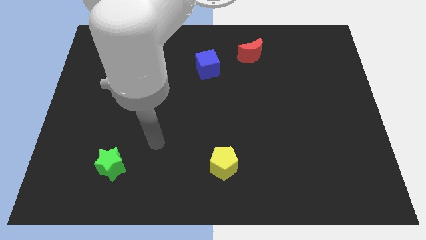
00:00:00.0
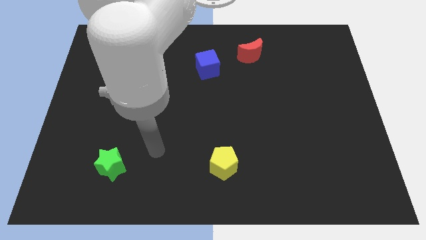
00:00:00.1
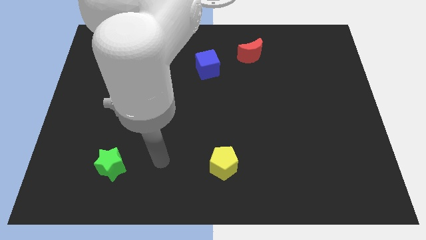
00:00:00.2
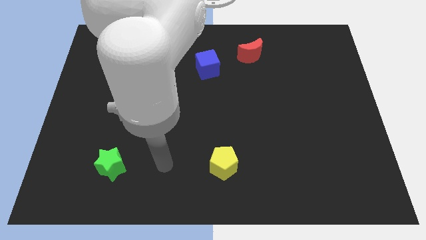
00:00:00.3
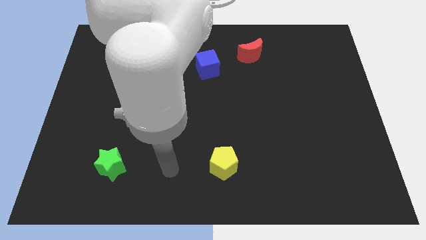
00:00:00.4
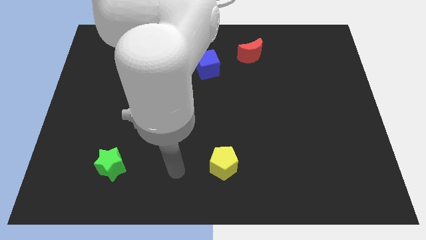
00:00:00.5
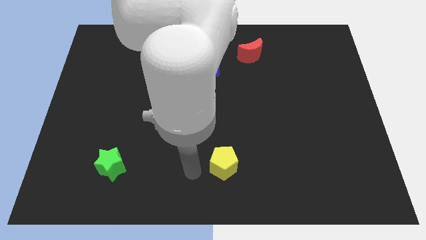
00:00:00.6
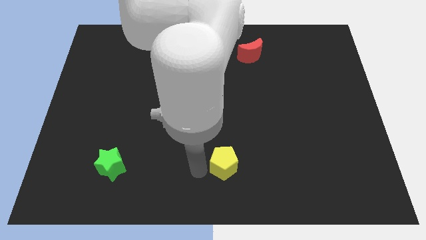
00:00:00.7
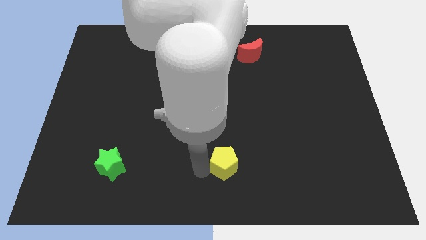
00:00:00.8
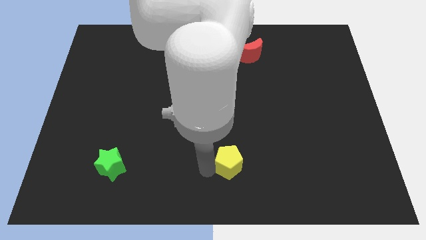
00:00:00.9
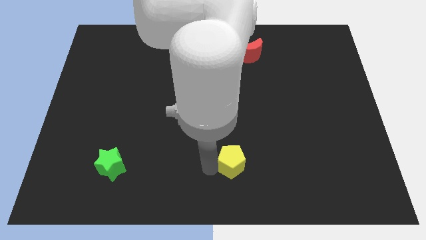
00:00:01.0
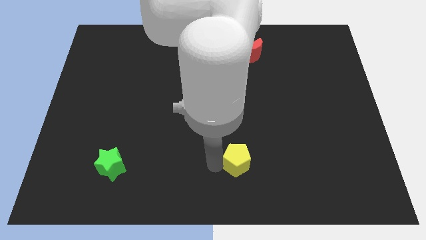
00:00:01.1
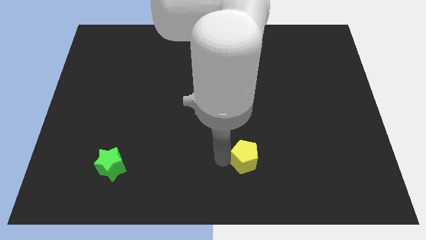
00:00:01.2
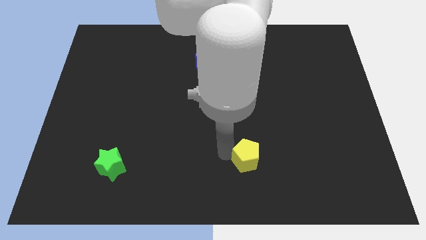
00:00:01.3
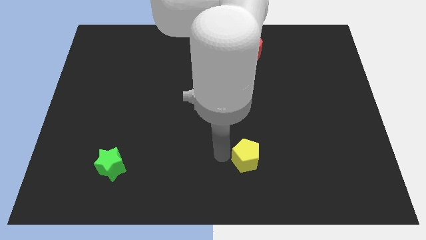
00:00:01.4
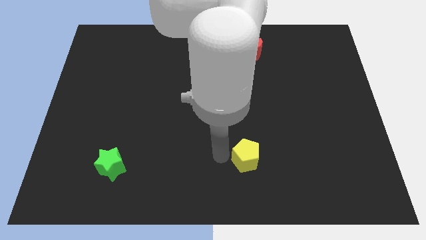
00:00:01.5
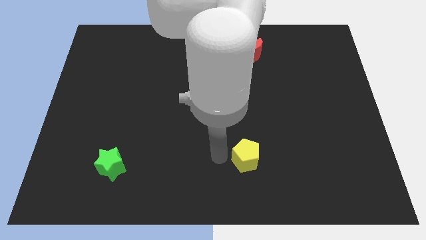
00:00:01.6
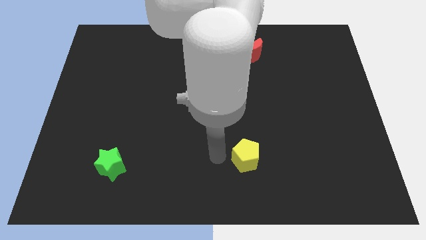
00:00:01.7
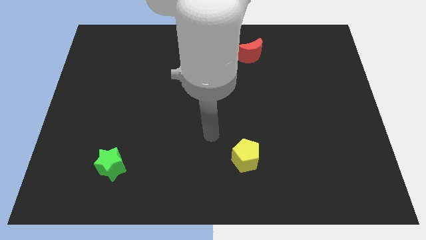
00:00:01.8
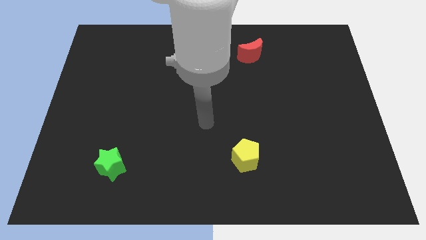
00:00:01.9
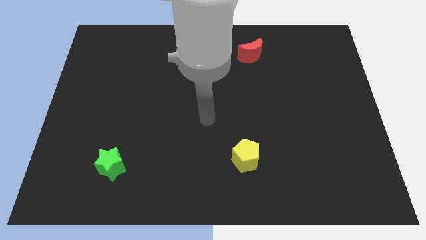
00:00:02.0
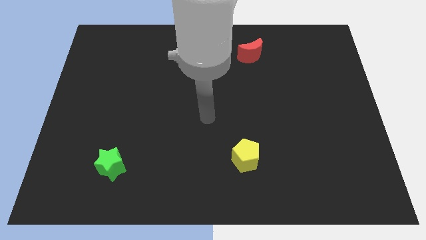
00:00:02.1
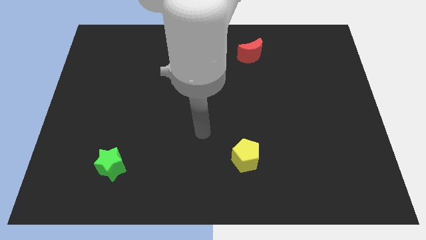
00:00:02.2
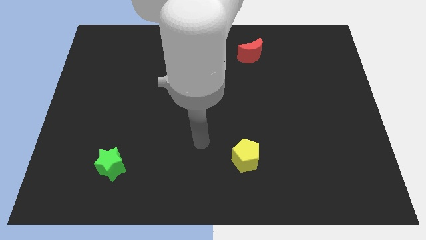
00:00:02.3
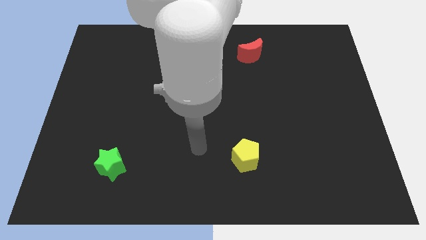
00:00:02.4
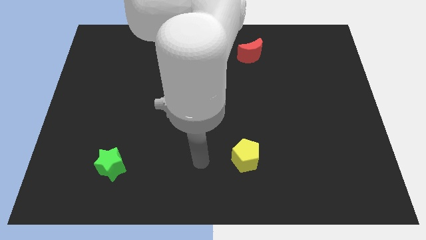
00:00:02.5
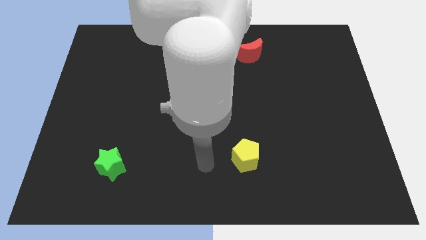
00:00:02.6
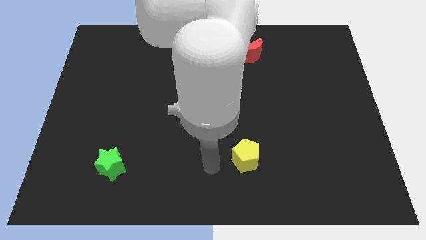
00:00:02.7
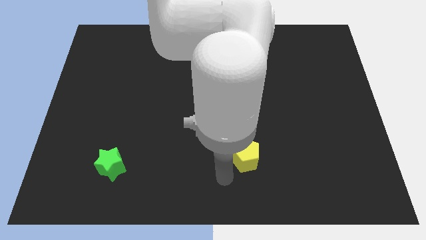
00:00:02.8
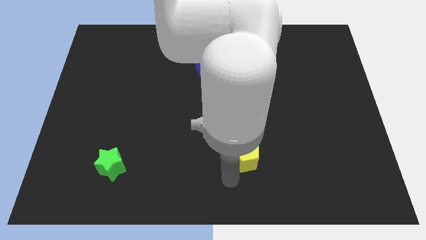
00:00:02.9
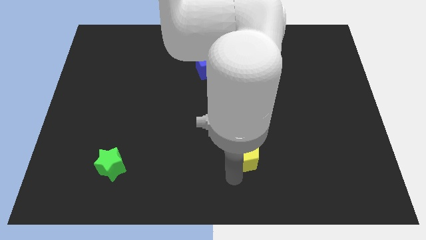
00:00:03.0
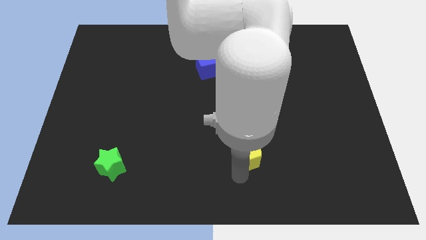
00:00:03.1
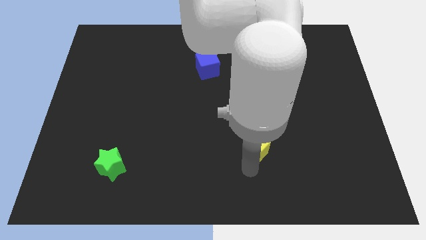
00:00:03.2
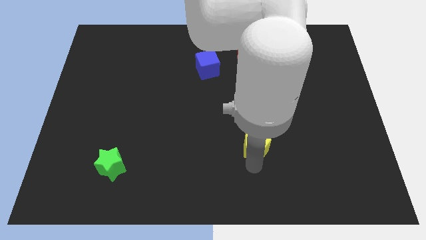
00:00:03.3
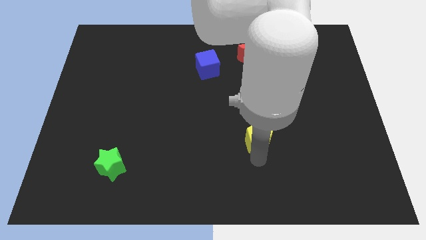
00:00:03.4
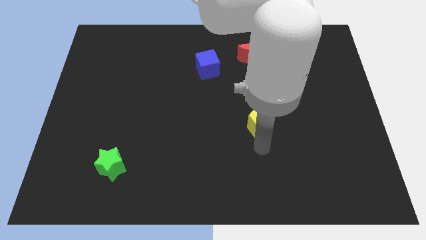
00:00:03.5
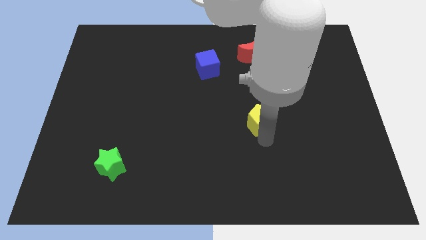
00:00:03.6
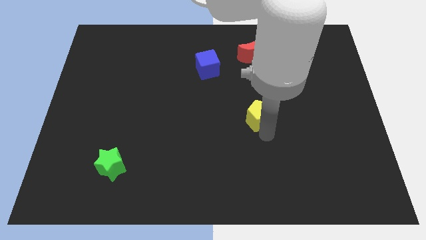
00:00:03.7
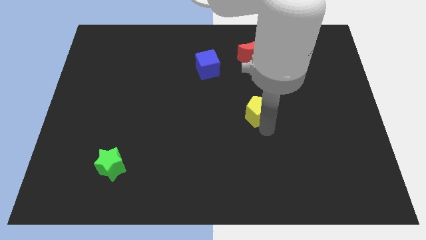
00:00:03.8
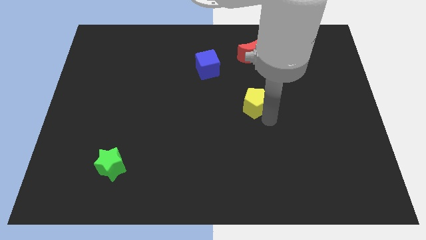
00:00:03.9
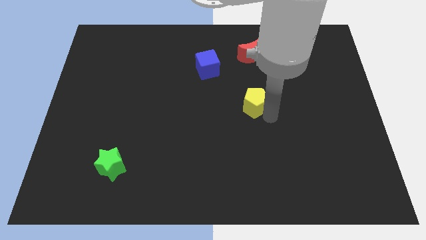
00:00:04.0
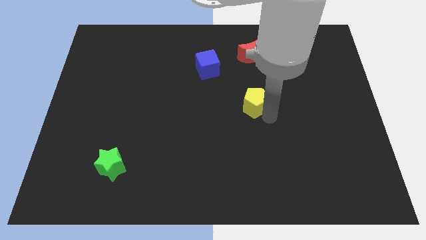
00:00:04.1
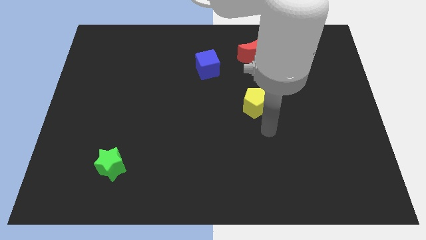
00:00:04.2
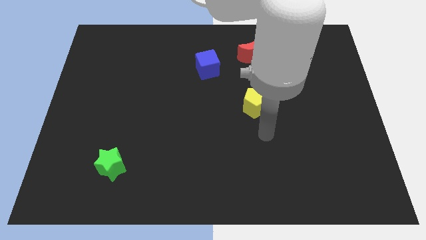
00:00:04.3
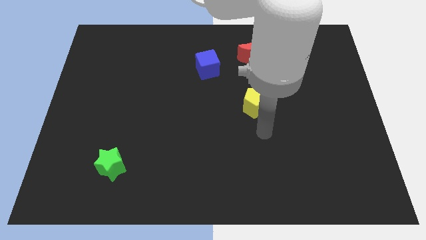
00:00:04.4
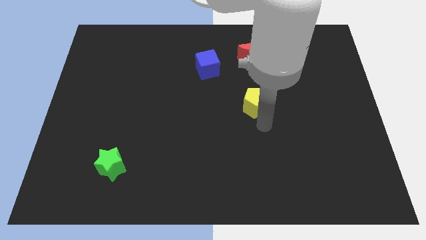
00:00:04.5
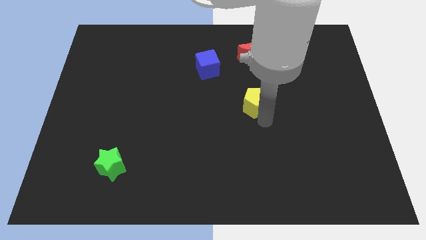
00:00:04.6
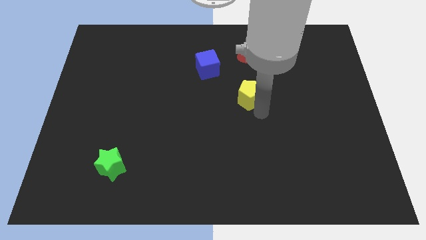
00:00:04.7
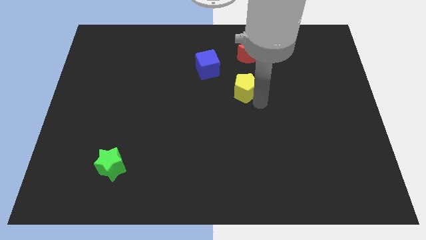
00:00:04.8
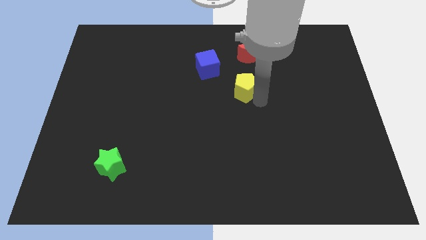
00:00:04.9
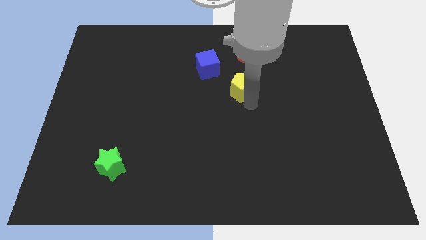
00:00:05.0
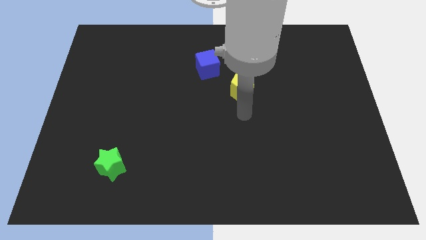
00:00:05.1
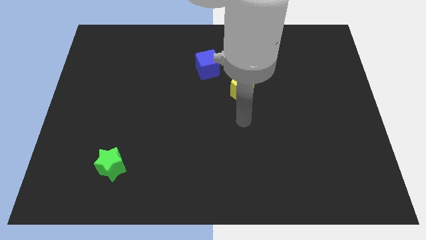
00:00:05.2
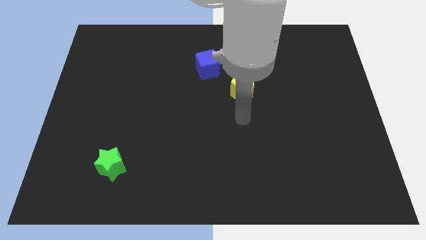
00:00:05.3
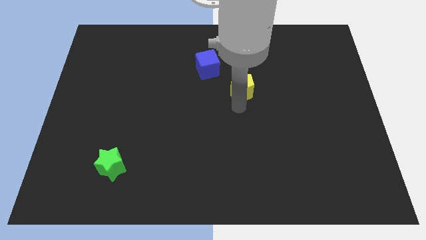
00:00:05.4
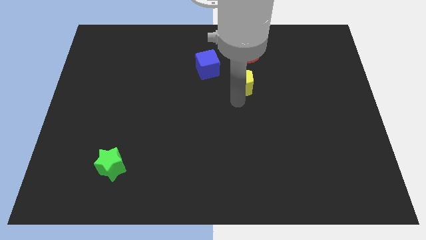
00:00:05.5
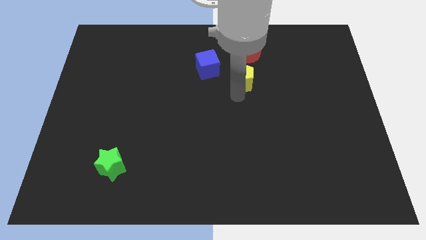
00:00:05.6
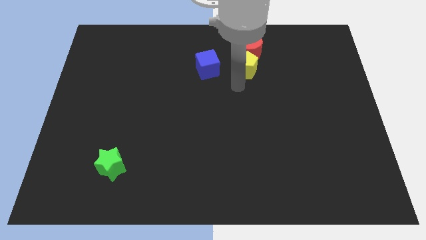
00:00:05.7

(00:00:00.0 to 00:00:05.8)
slide the pentagon to the red block

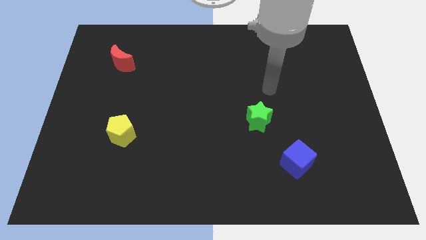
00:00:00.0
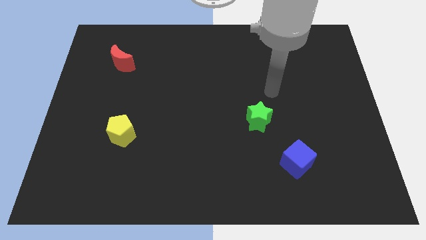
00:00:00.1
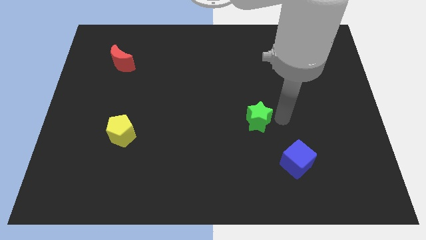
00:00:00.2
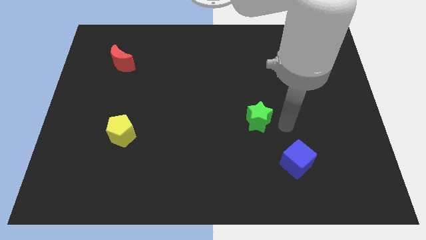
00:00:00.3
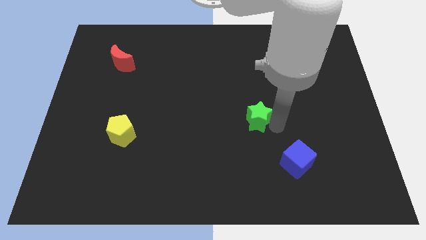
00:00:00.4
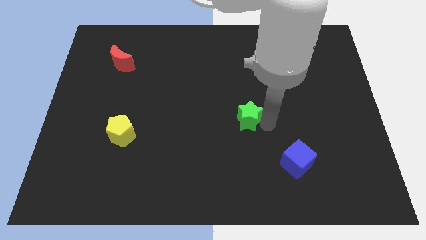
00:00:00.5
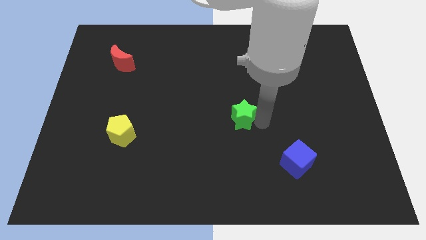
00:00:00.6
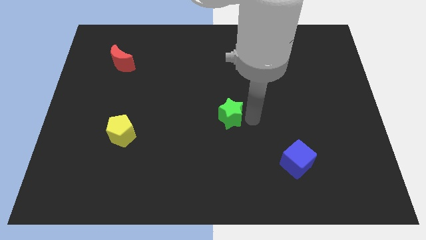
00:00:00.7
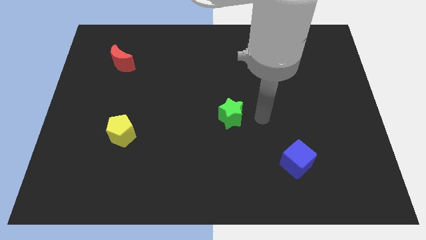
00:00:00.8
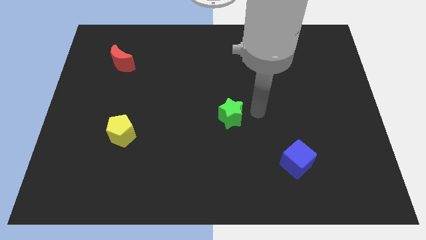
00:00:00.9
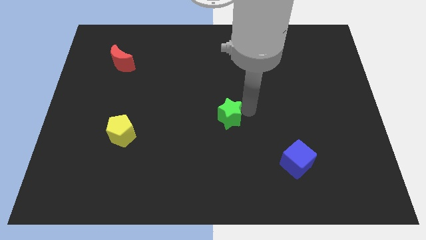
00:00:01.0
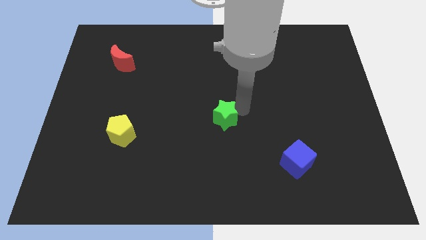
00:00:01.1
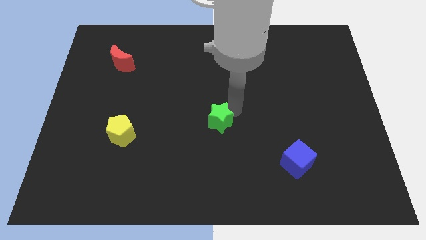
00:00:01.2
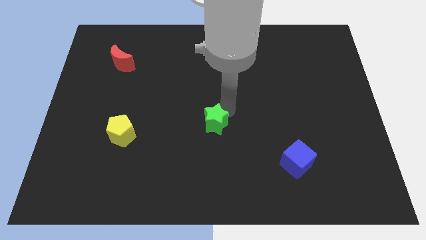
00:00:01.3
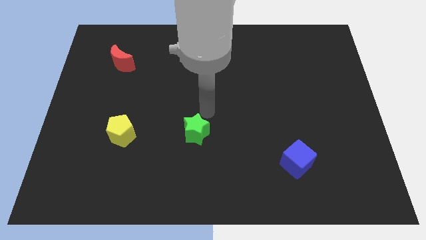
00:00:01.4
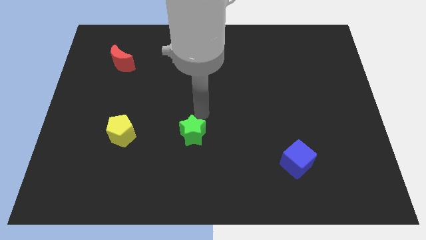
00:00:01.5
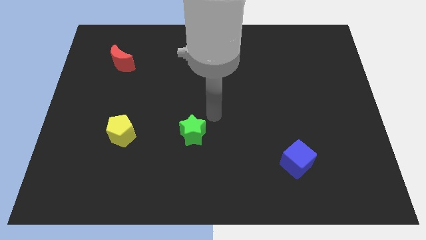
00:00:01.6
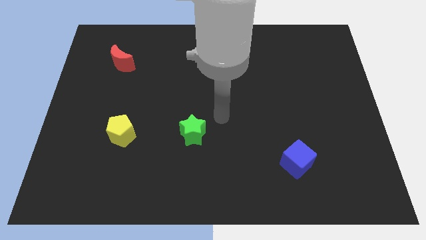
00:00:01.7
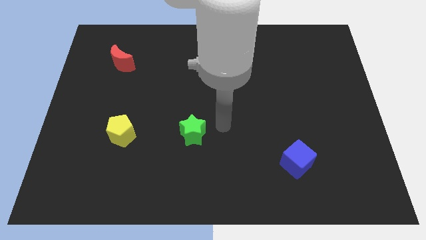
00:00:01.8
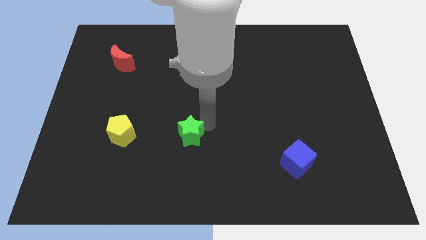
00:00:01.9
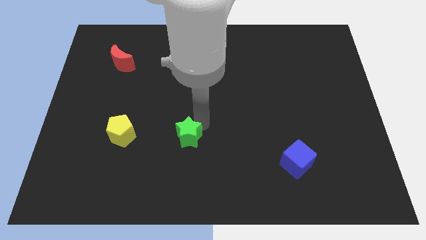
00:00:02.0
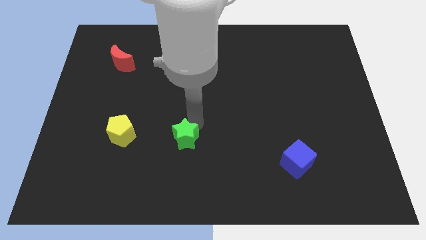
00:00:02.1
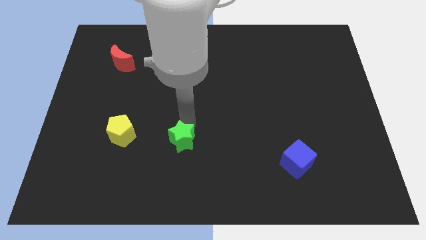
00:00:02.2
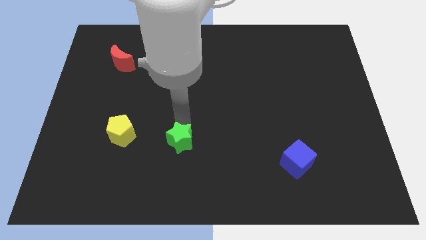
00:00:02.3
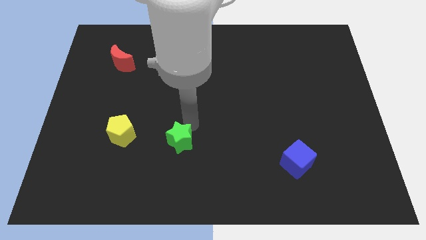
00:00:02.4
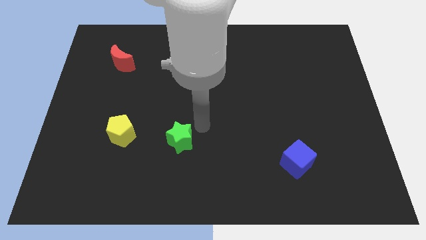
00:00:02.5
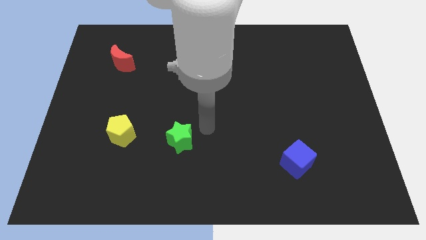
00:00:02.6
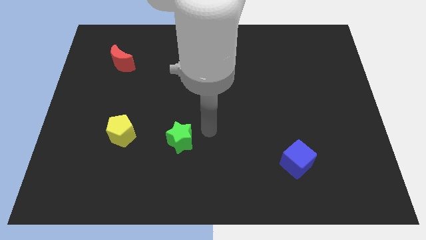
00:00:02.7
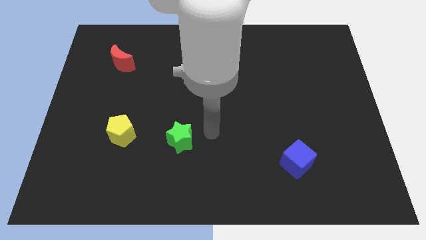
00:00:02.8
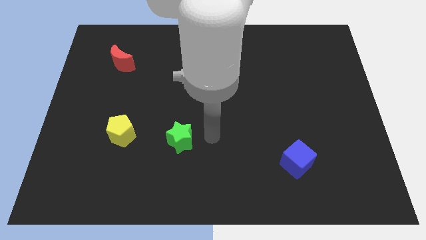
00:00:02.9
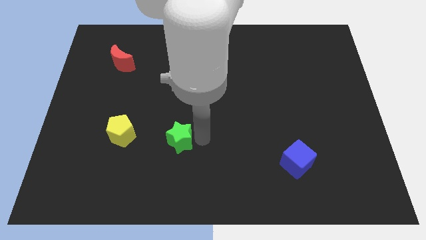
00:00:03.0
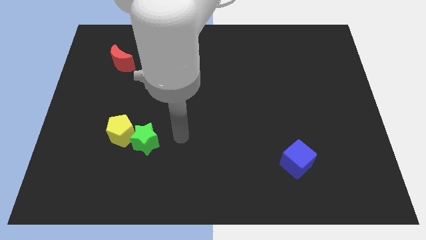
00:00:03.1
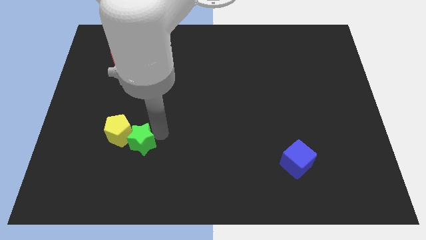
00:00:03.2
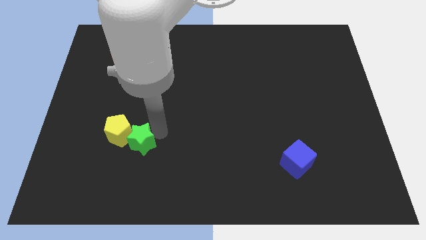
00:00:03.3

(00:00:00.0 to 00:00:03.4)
push the star to the yellow pentagon
